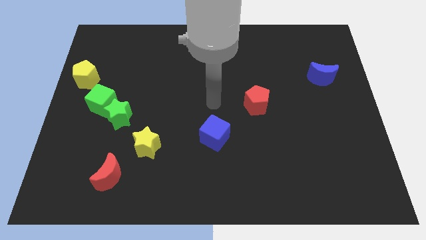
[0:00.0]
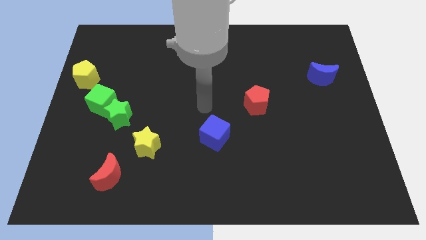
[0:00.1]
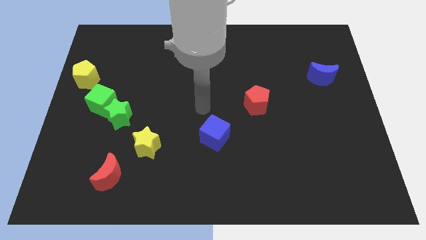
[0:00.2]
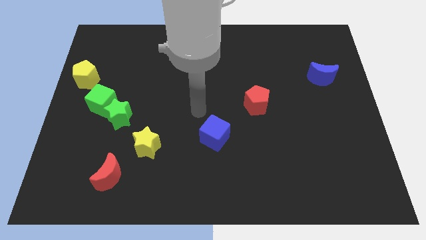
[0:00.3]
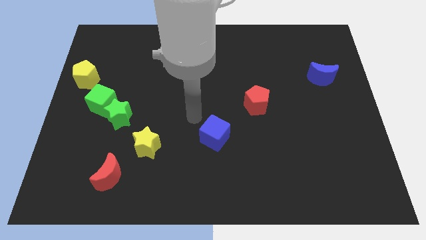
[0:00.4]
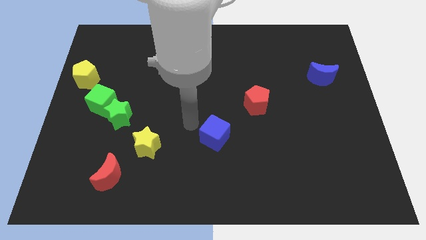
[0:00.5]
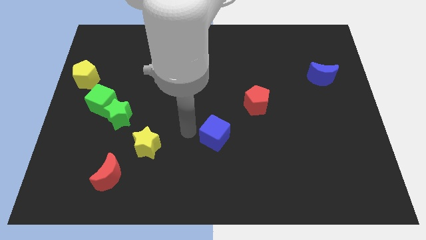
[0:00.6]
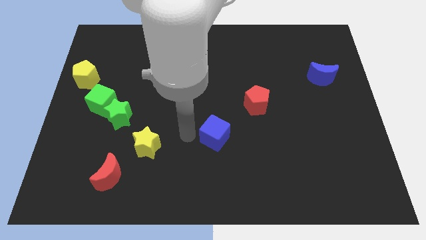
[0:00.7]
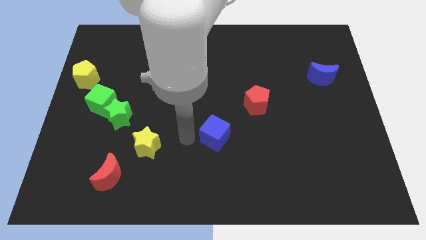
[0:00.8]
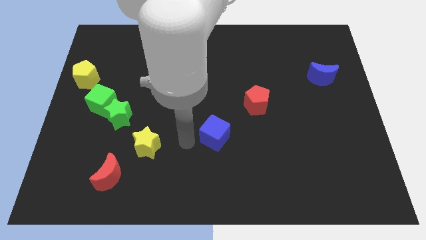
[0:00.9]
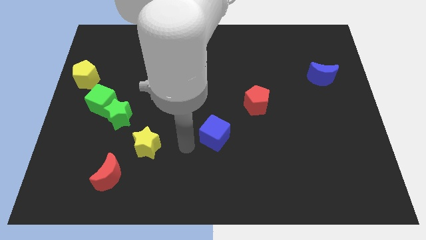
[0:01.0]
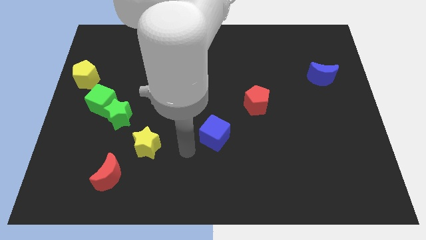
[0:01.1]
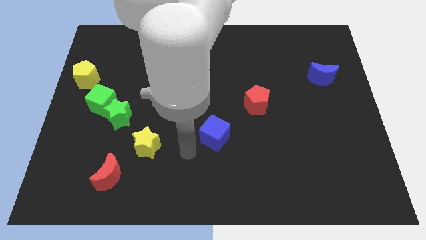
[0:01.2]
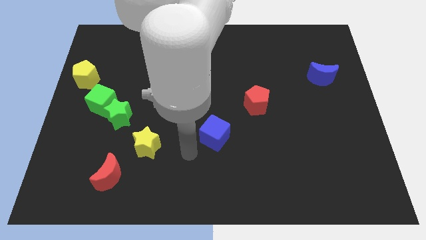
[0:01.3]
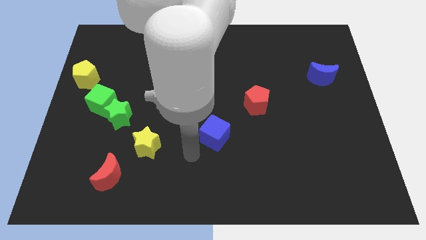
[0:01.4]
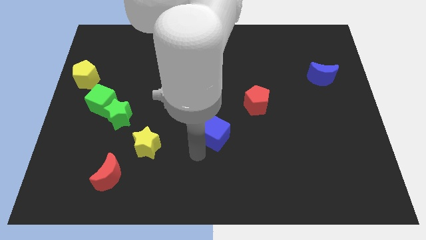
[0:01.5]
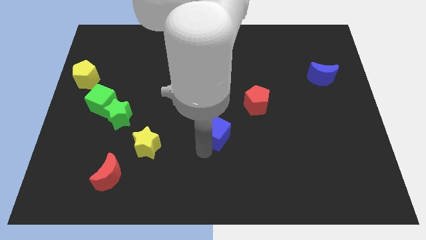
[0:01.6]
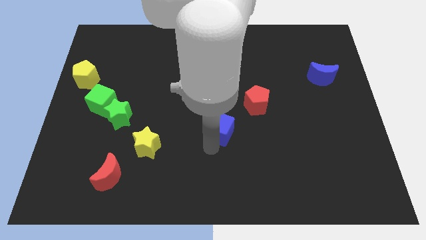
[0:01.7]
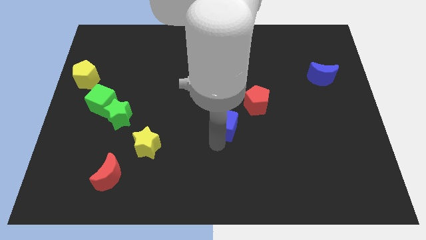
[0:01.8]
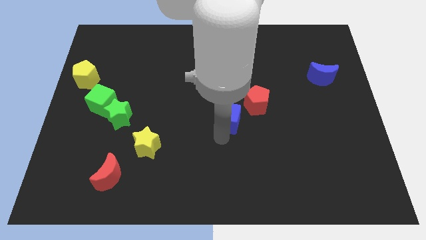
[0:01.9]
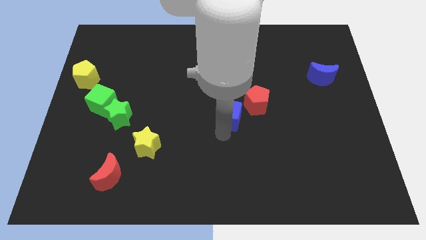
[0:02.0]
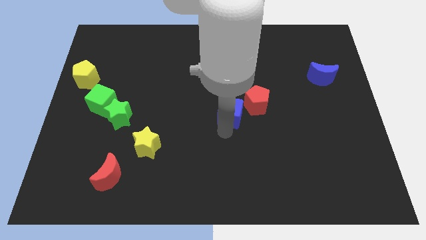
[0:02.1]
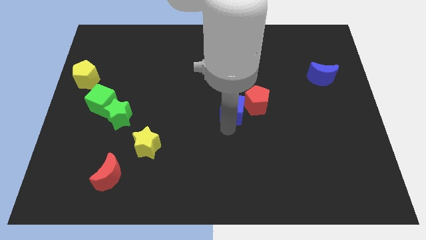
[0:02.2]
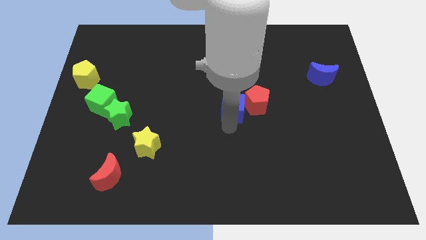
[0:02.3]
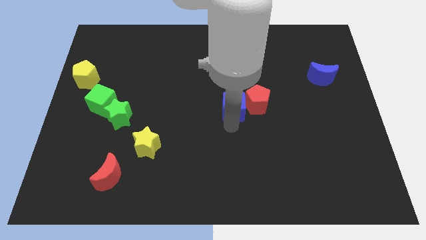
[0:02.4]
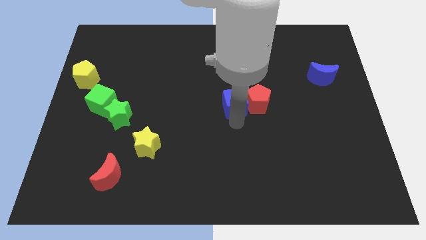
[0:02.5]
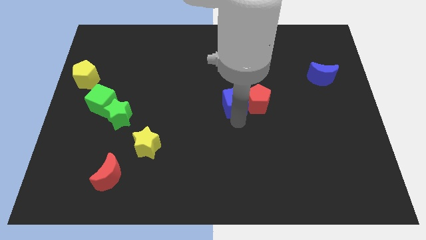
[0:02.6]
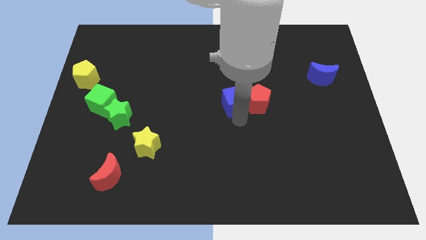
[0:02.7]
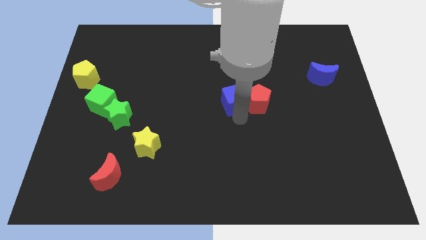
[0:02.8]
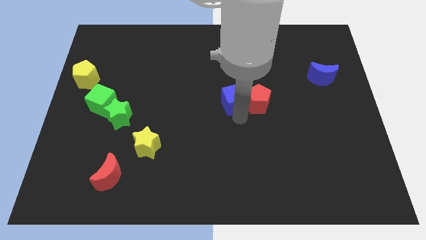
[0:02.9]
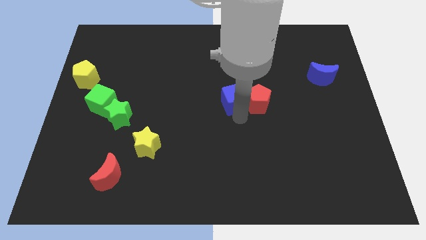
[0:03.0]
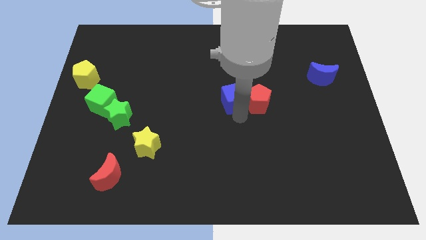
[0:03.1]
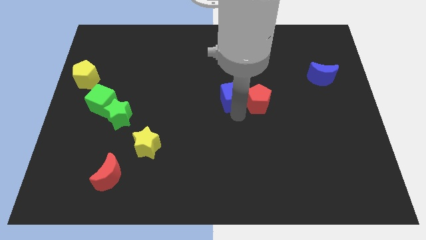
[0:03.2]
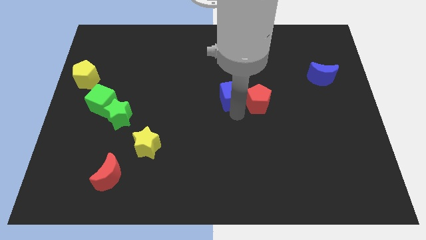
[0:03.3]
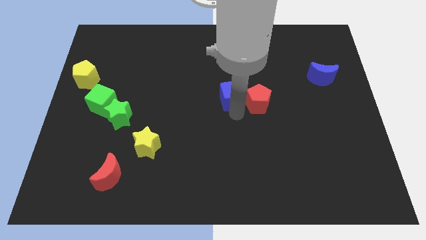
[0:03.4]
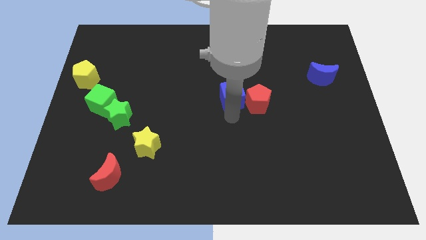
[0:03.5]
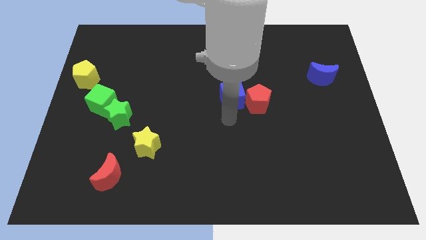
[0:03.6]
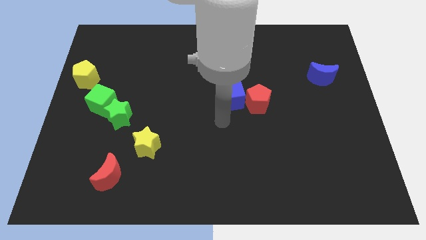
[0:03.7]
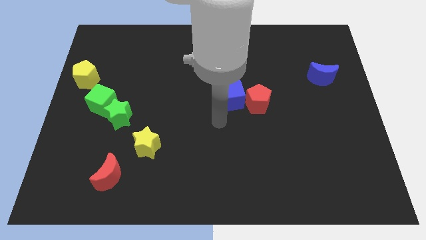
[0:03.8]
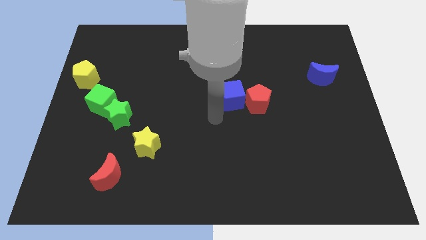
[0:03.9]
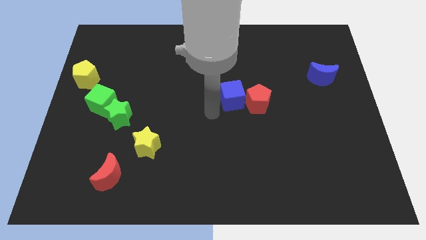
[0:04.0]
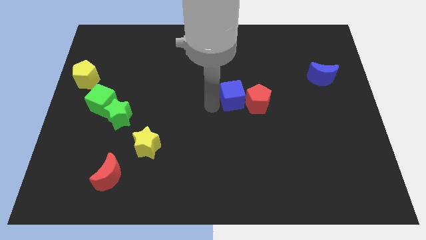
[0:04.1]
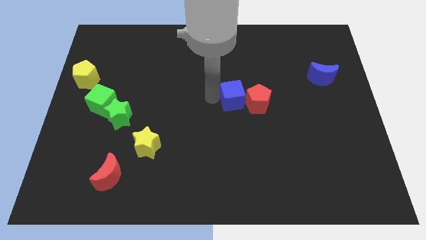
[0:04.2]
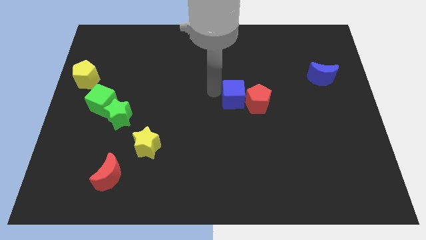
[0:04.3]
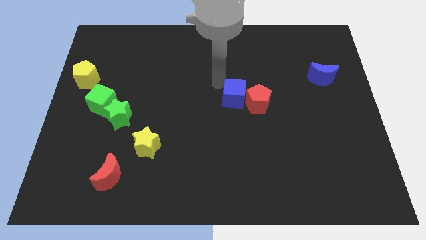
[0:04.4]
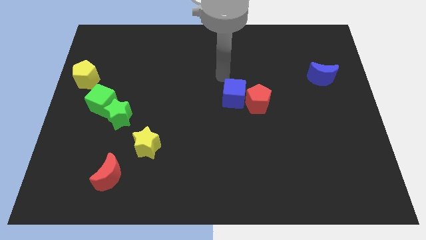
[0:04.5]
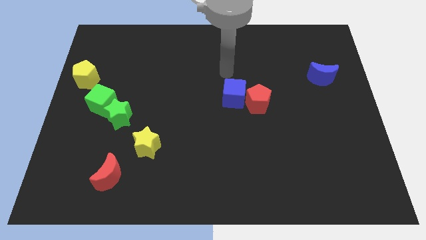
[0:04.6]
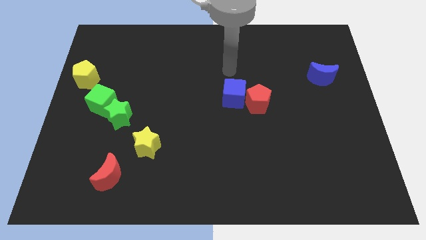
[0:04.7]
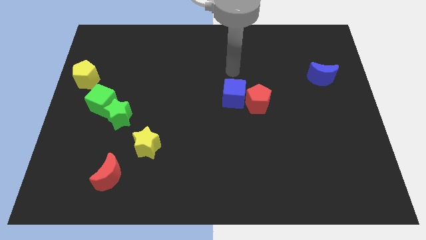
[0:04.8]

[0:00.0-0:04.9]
place blue cube to the left of red pentagon

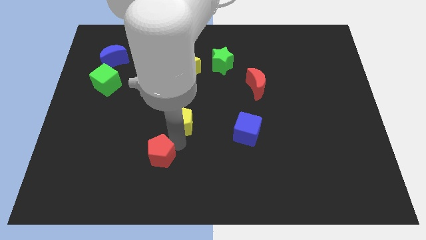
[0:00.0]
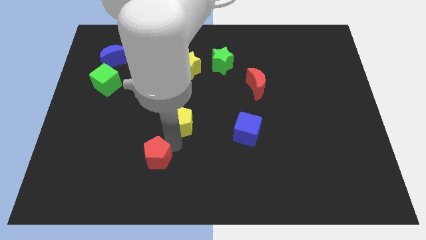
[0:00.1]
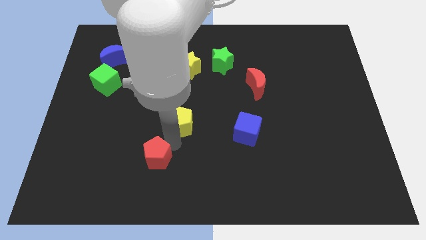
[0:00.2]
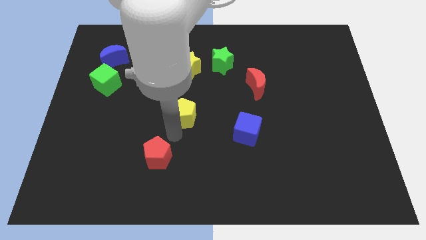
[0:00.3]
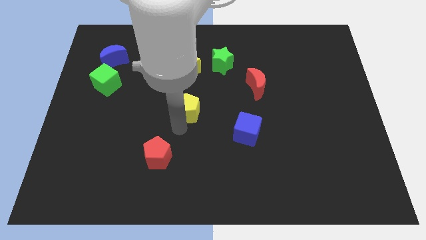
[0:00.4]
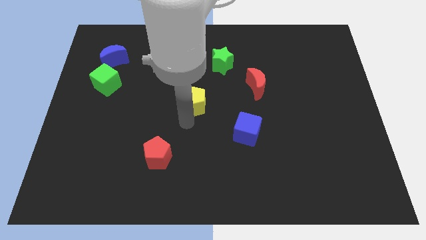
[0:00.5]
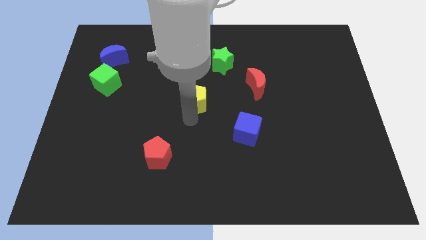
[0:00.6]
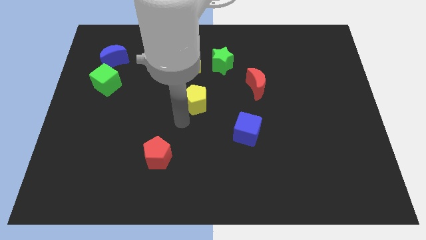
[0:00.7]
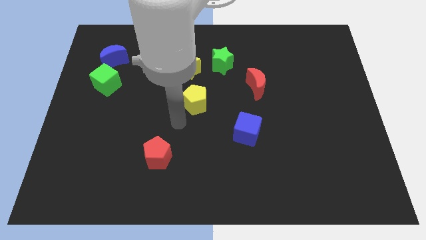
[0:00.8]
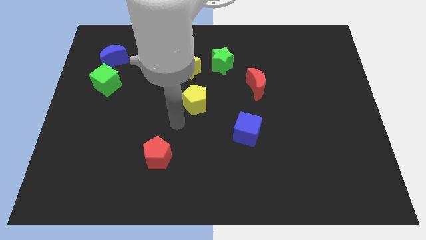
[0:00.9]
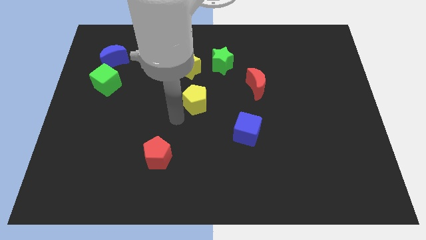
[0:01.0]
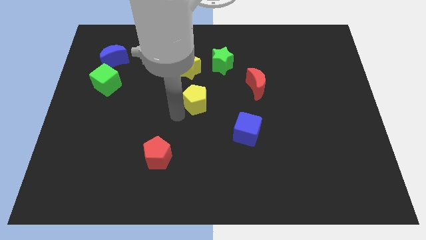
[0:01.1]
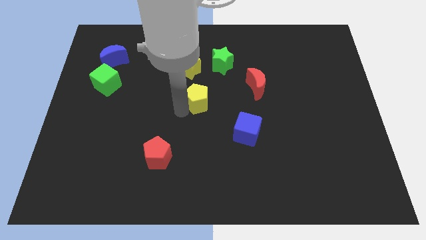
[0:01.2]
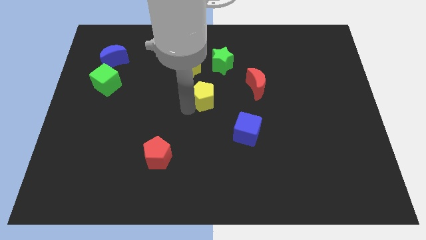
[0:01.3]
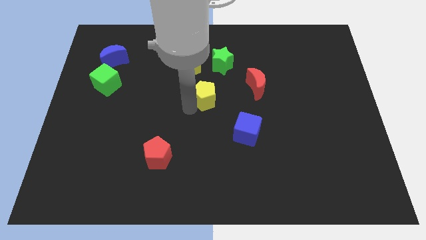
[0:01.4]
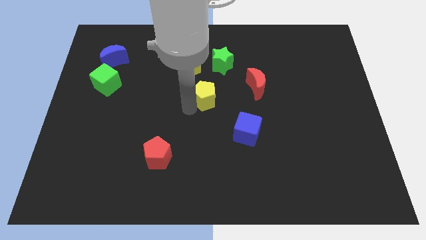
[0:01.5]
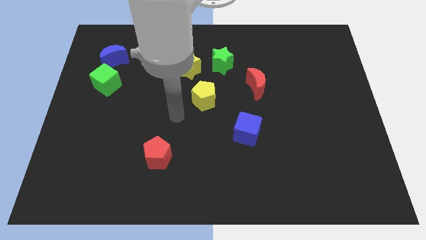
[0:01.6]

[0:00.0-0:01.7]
move the yellow pentagon to the center of the board

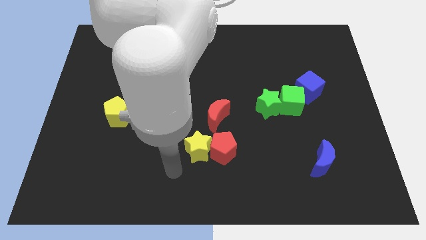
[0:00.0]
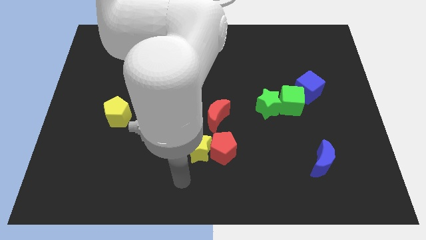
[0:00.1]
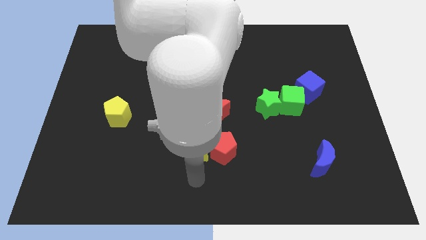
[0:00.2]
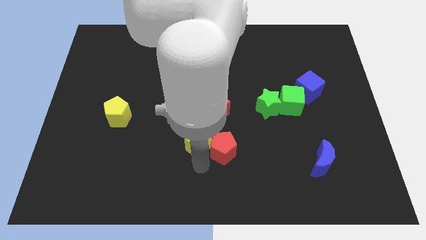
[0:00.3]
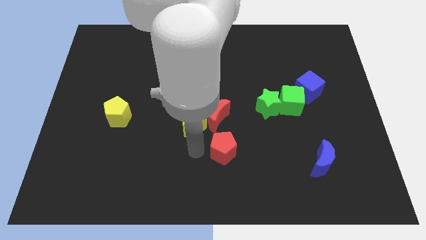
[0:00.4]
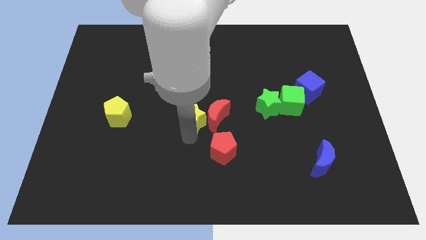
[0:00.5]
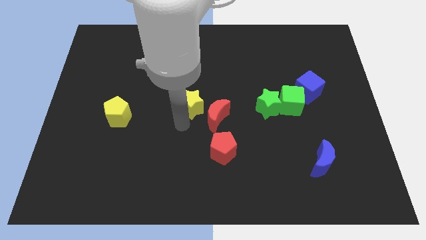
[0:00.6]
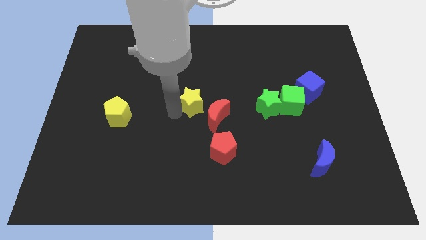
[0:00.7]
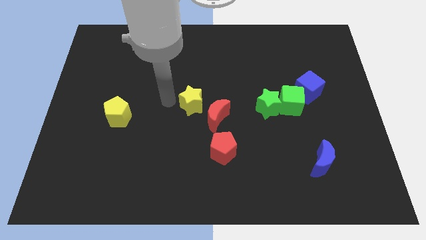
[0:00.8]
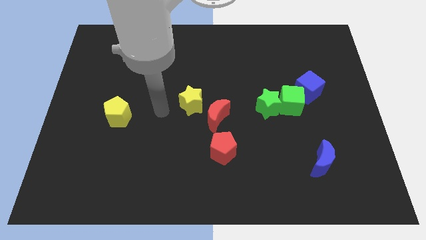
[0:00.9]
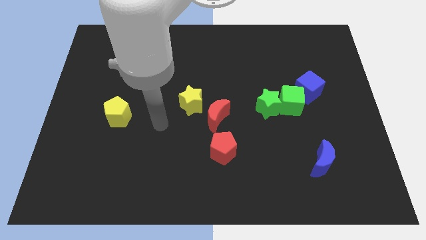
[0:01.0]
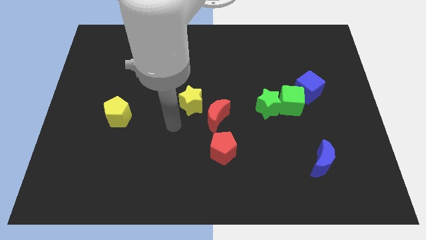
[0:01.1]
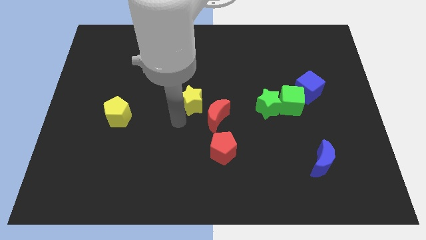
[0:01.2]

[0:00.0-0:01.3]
move the yellow star towards the center of the board

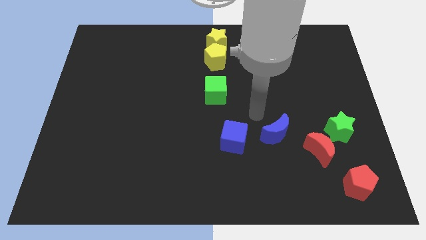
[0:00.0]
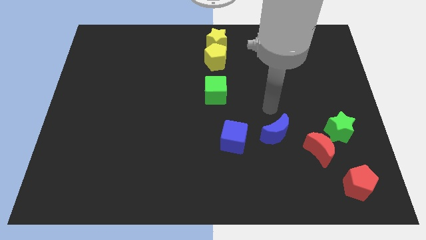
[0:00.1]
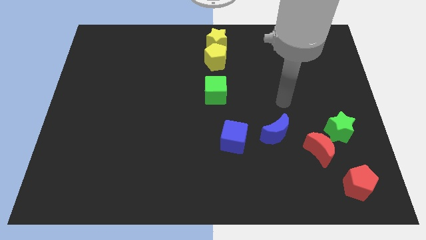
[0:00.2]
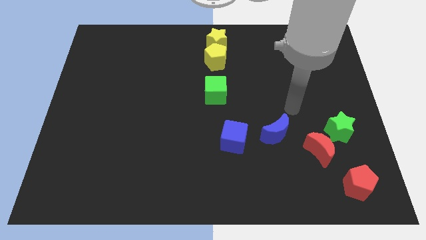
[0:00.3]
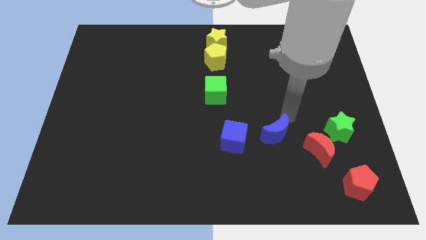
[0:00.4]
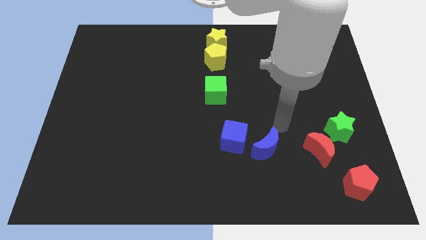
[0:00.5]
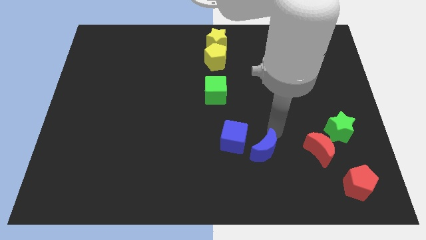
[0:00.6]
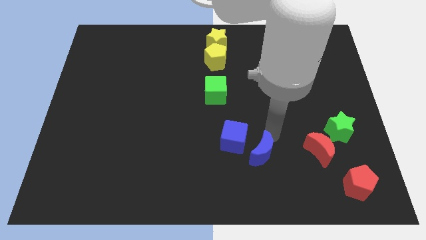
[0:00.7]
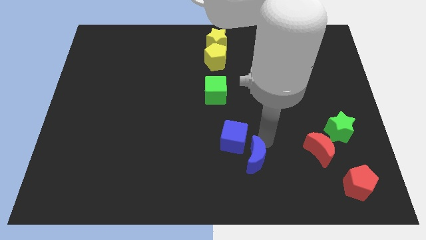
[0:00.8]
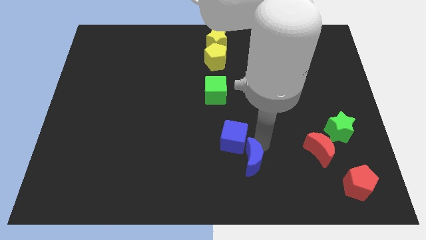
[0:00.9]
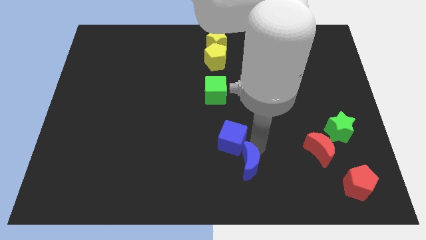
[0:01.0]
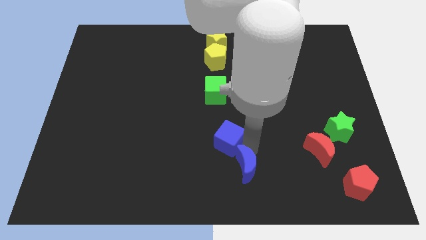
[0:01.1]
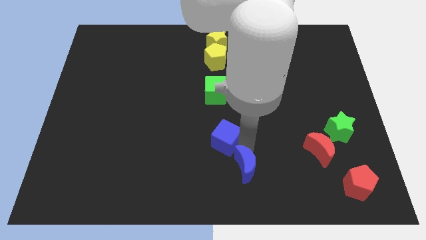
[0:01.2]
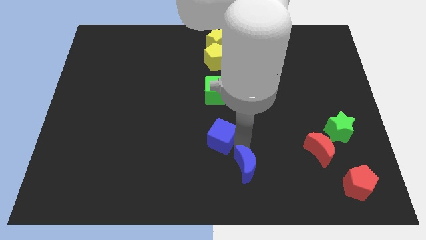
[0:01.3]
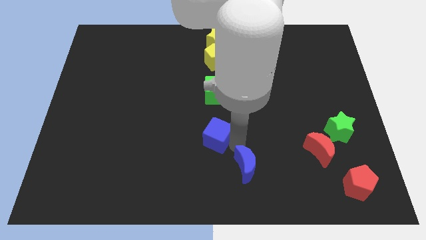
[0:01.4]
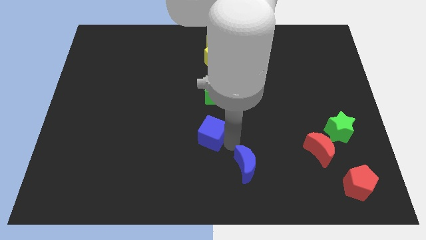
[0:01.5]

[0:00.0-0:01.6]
place the blue moon left to the red moon
